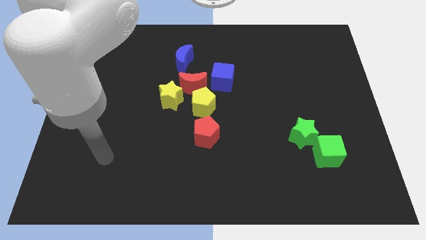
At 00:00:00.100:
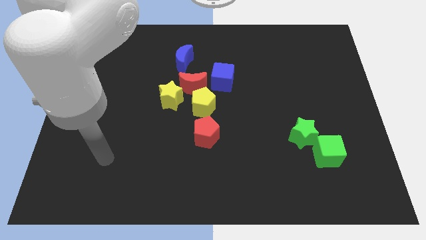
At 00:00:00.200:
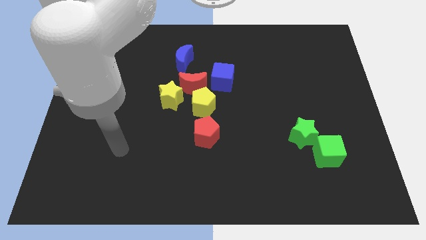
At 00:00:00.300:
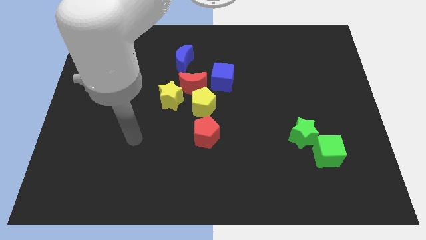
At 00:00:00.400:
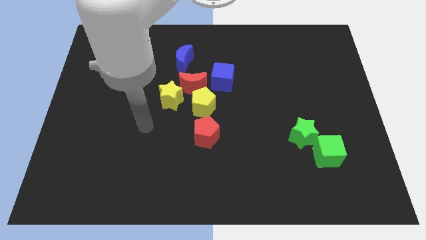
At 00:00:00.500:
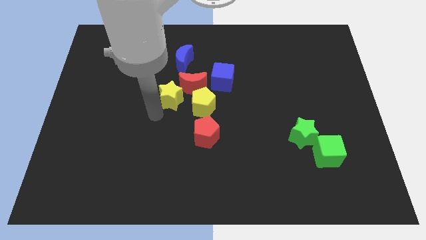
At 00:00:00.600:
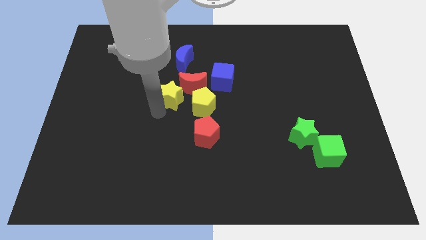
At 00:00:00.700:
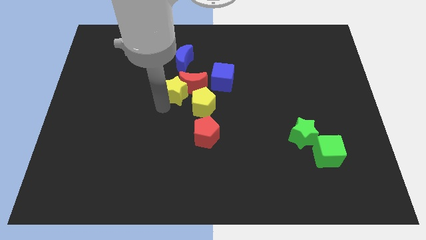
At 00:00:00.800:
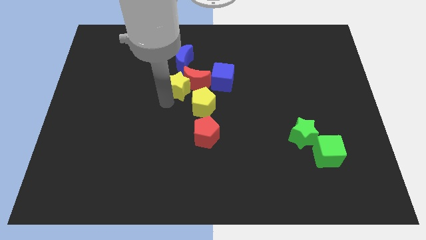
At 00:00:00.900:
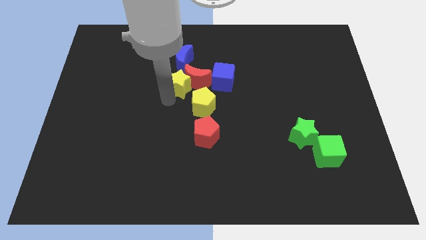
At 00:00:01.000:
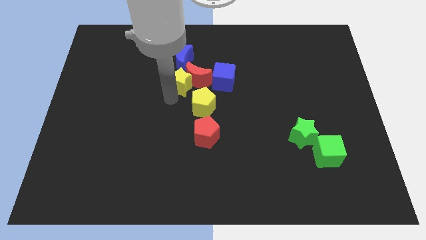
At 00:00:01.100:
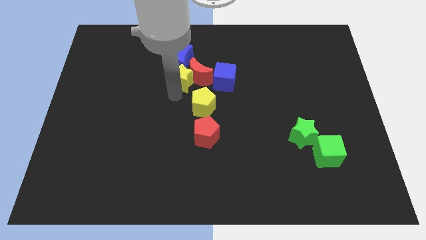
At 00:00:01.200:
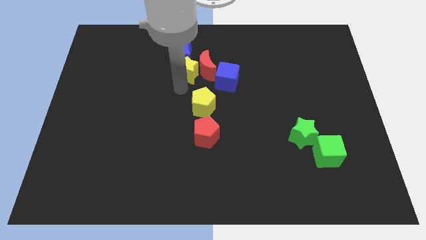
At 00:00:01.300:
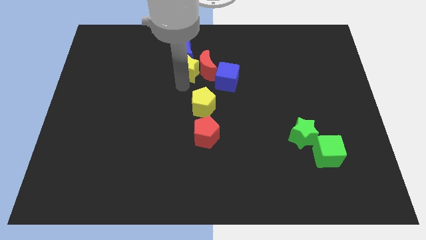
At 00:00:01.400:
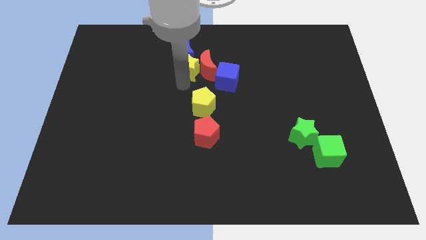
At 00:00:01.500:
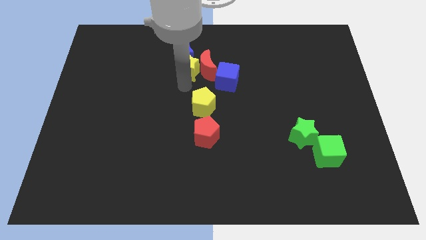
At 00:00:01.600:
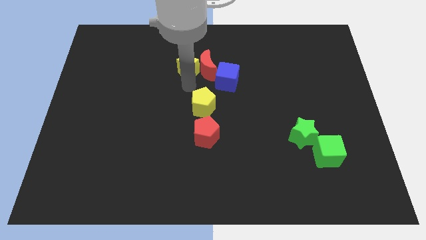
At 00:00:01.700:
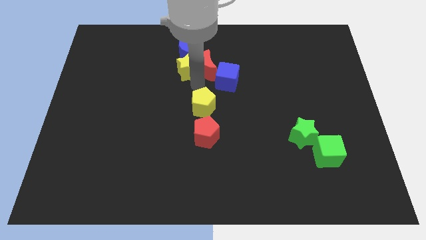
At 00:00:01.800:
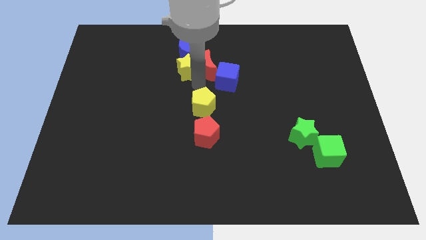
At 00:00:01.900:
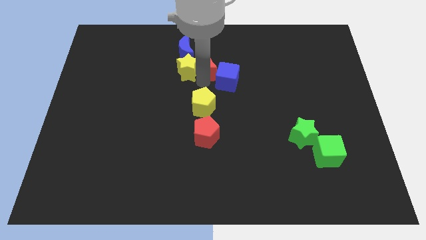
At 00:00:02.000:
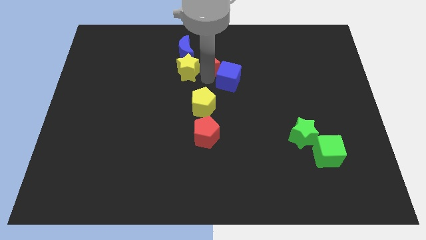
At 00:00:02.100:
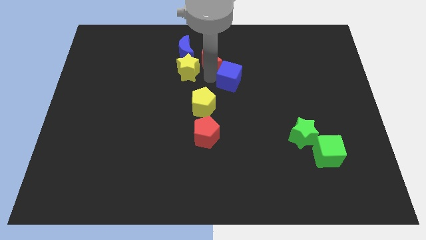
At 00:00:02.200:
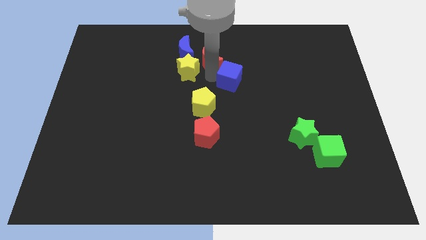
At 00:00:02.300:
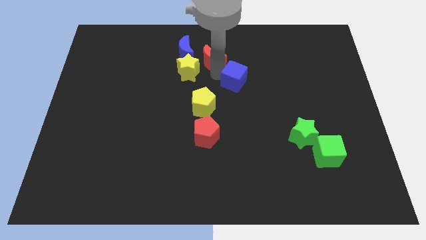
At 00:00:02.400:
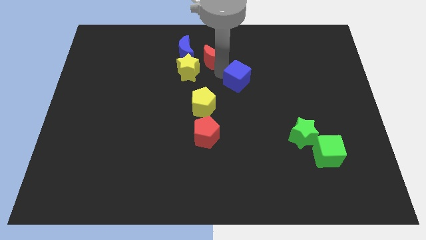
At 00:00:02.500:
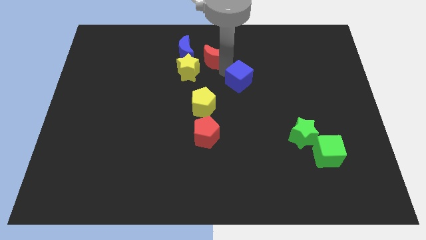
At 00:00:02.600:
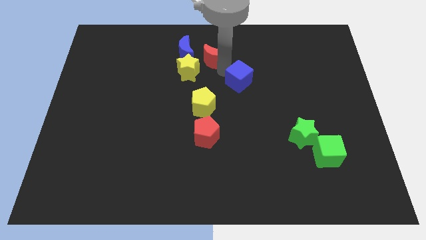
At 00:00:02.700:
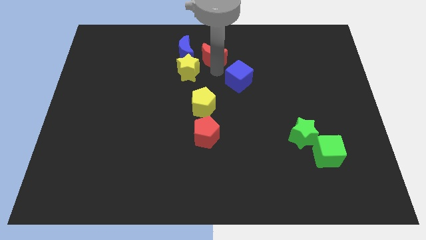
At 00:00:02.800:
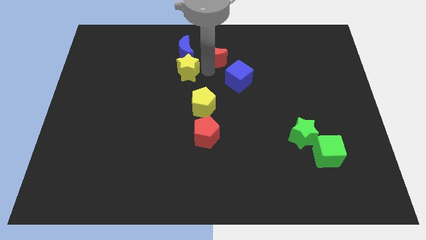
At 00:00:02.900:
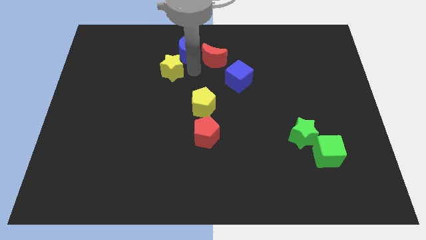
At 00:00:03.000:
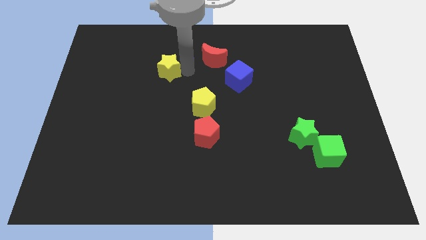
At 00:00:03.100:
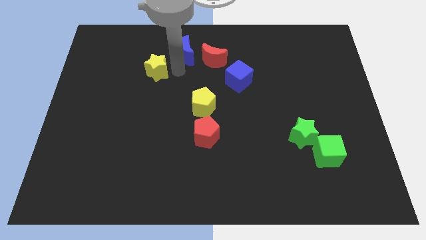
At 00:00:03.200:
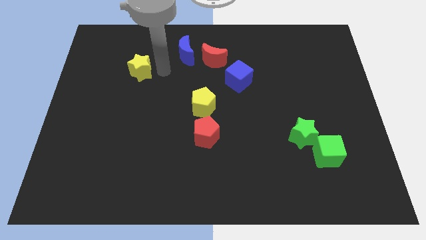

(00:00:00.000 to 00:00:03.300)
separate yellow star from the group of blocks

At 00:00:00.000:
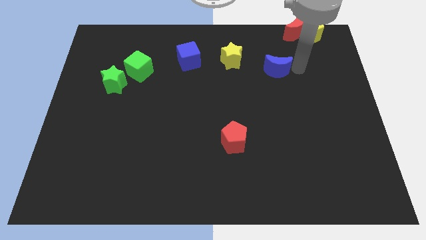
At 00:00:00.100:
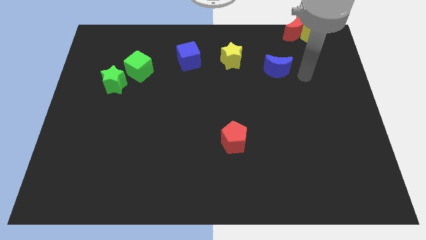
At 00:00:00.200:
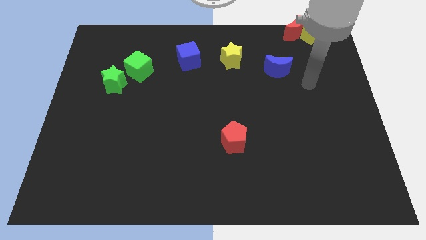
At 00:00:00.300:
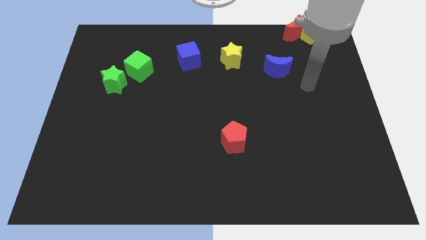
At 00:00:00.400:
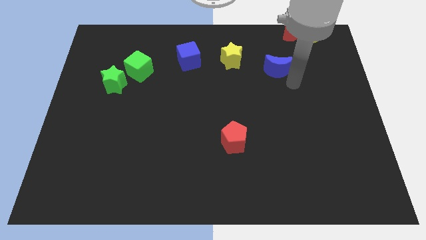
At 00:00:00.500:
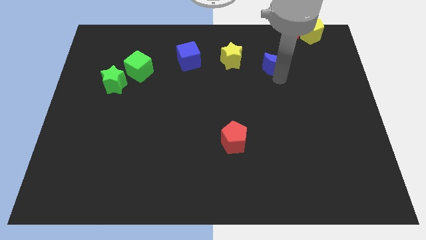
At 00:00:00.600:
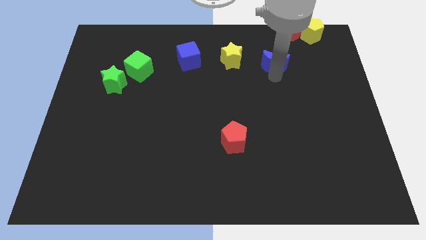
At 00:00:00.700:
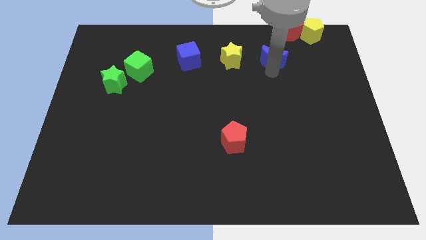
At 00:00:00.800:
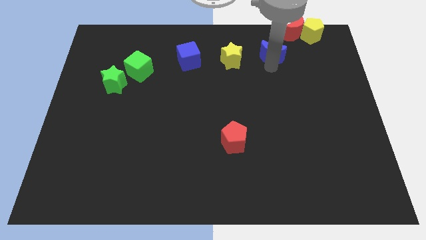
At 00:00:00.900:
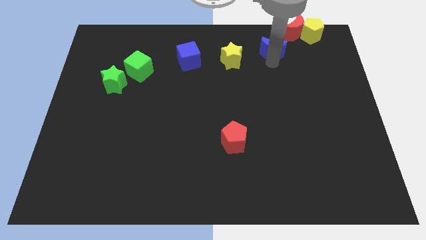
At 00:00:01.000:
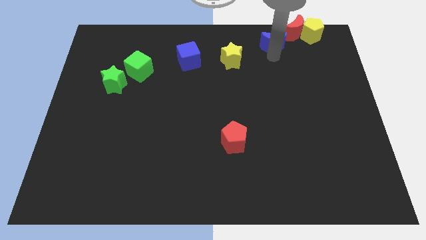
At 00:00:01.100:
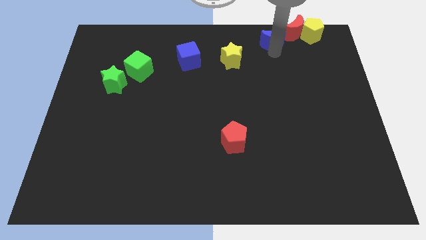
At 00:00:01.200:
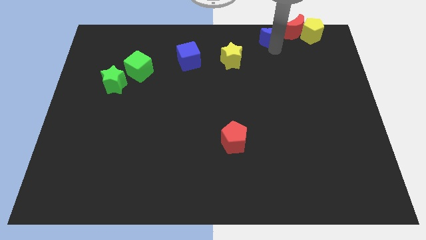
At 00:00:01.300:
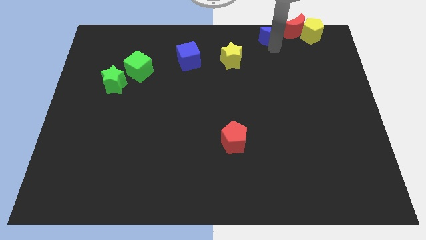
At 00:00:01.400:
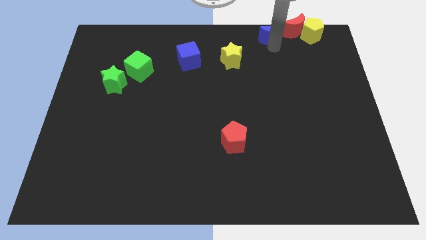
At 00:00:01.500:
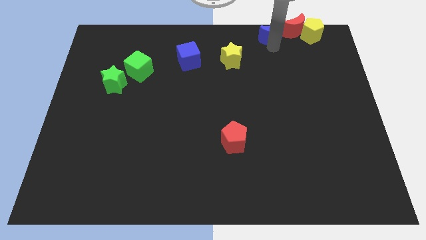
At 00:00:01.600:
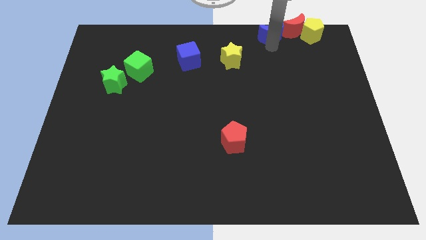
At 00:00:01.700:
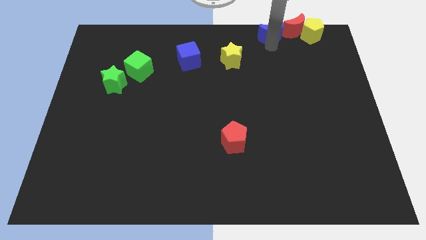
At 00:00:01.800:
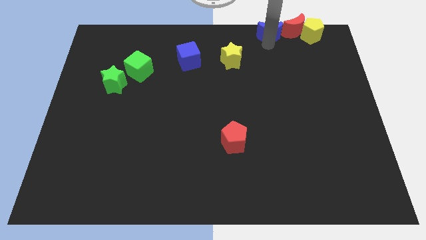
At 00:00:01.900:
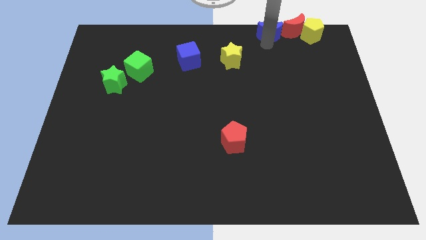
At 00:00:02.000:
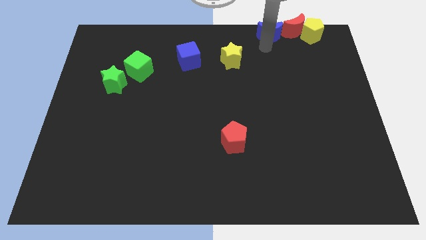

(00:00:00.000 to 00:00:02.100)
place the blue moon to the left of red crescent

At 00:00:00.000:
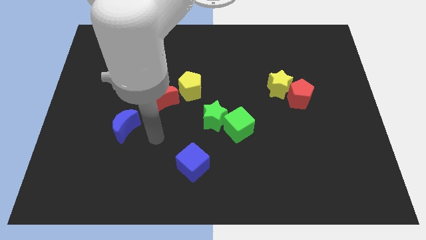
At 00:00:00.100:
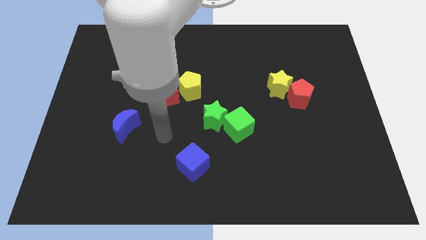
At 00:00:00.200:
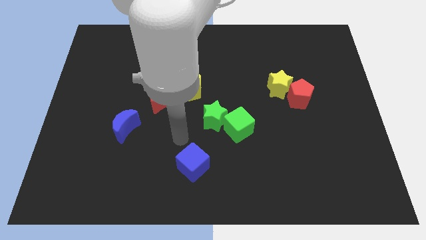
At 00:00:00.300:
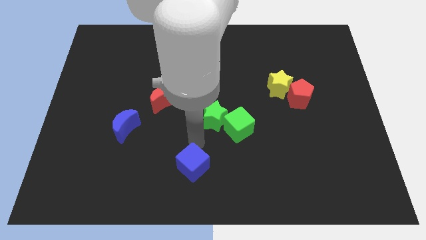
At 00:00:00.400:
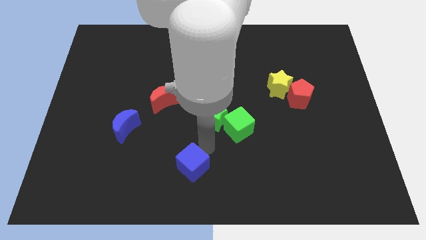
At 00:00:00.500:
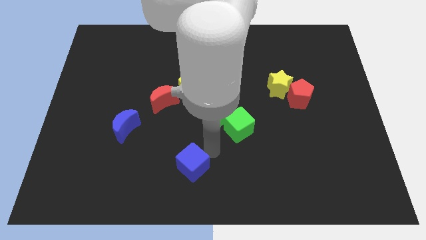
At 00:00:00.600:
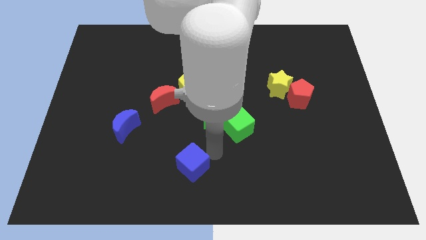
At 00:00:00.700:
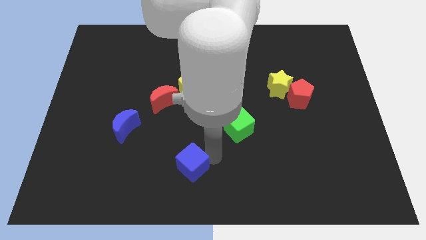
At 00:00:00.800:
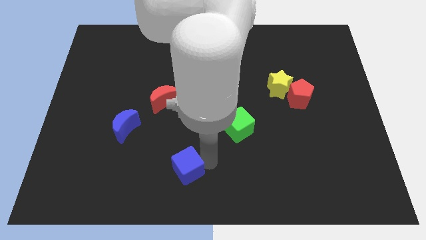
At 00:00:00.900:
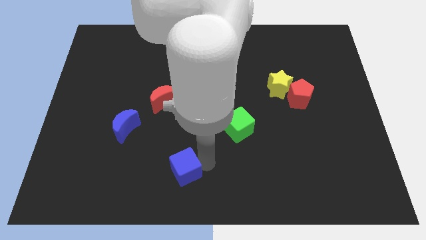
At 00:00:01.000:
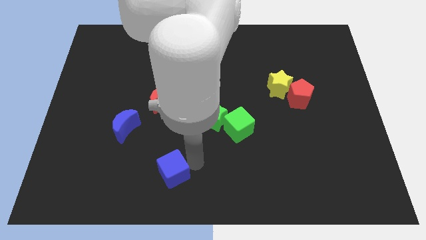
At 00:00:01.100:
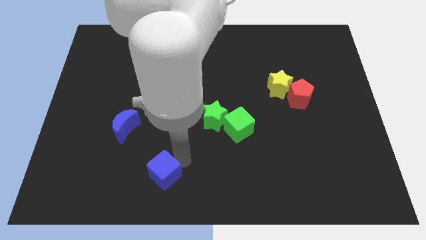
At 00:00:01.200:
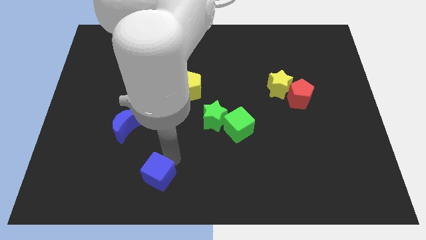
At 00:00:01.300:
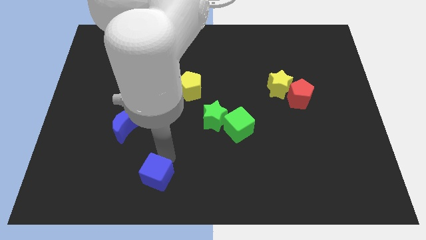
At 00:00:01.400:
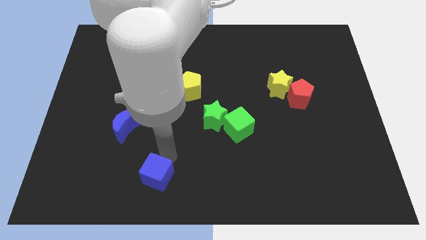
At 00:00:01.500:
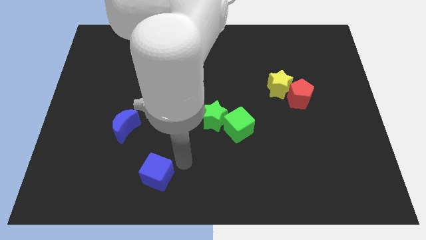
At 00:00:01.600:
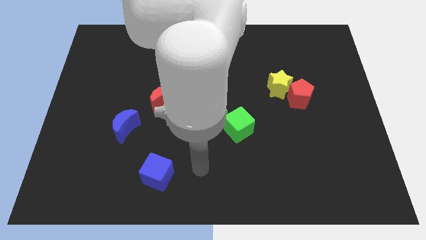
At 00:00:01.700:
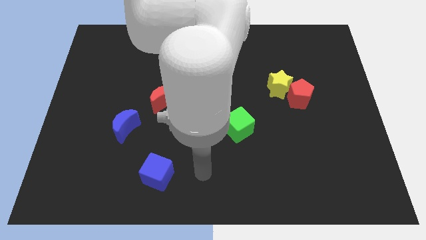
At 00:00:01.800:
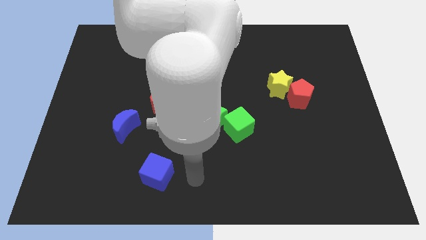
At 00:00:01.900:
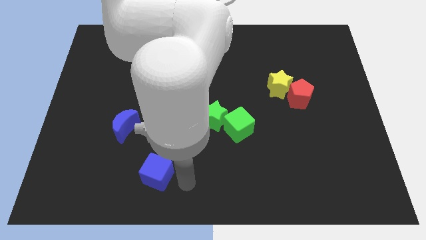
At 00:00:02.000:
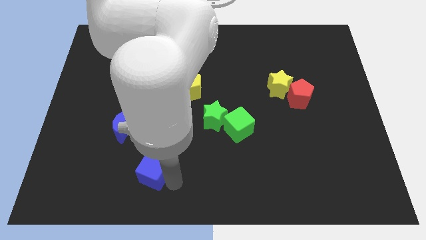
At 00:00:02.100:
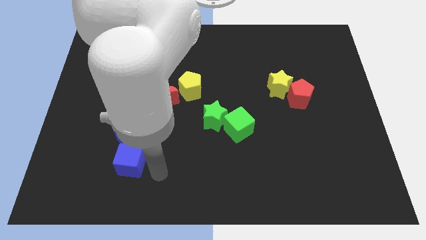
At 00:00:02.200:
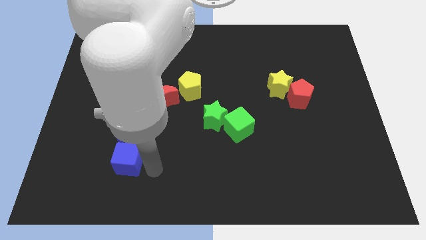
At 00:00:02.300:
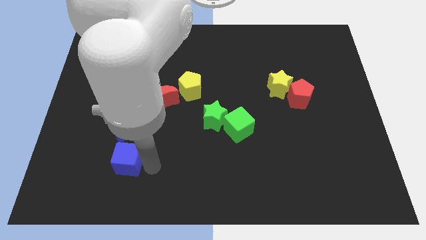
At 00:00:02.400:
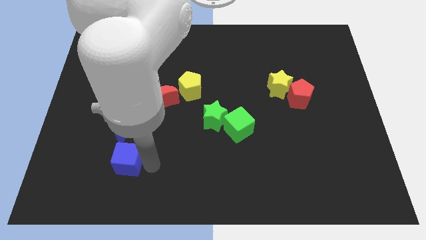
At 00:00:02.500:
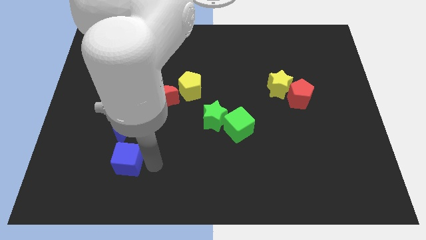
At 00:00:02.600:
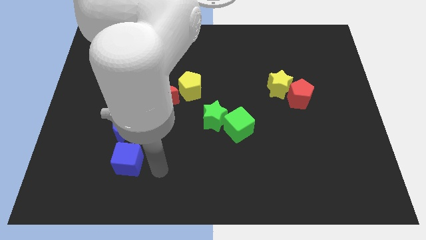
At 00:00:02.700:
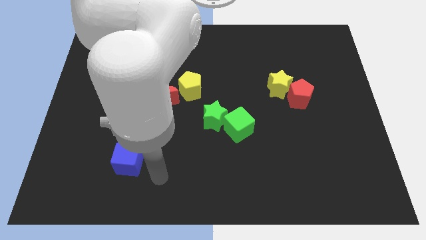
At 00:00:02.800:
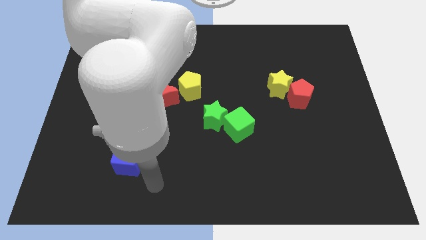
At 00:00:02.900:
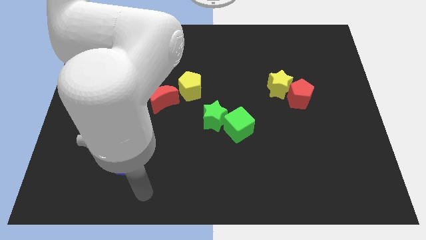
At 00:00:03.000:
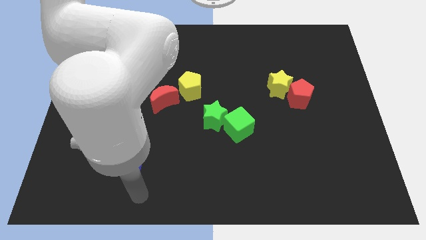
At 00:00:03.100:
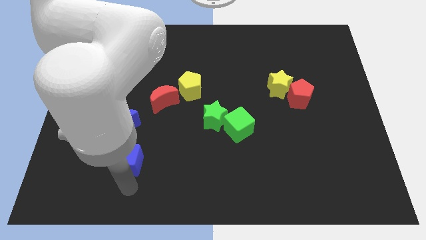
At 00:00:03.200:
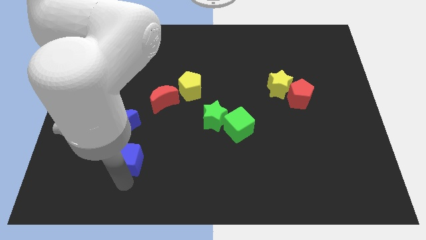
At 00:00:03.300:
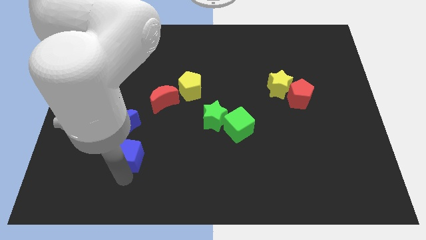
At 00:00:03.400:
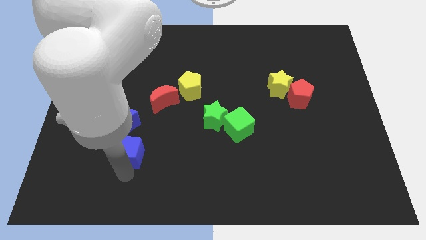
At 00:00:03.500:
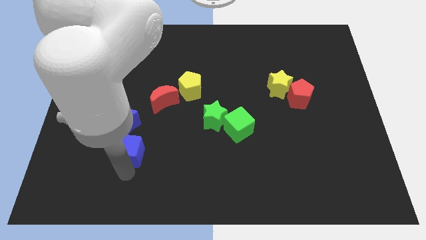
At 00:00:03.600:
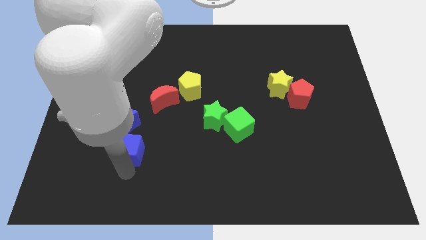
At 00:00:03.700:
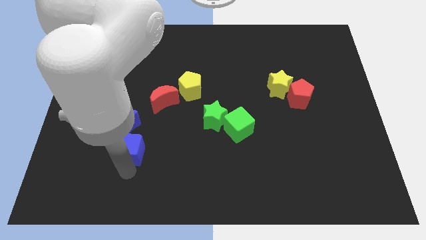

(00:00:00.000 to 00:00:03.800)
move the blue cube to the bottom side of the blue moon
